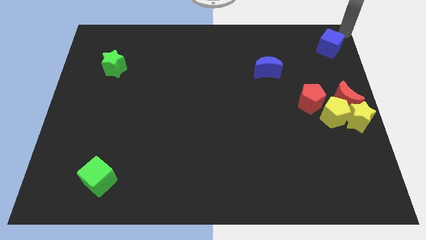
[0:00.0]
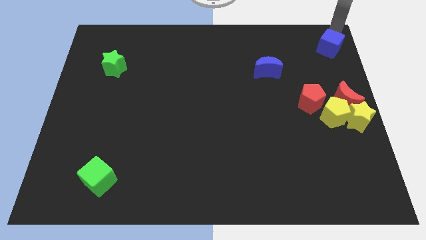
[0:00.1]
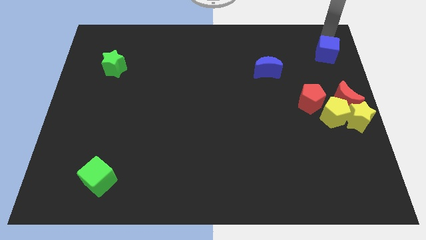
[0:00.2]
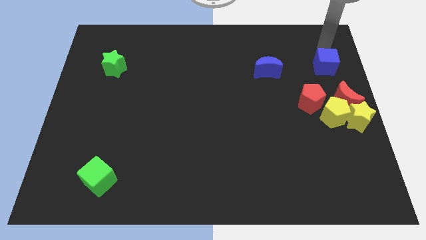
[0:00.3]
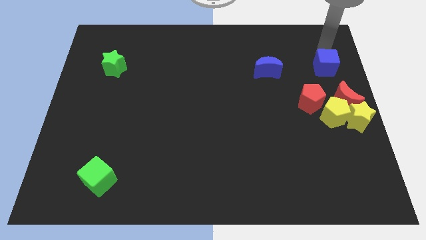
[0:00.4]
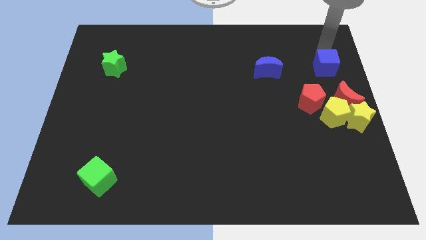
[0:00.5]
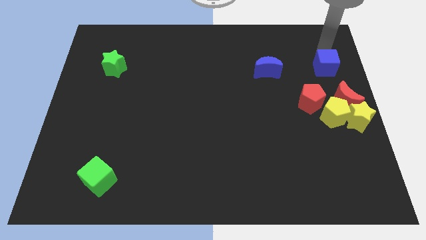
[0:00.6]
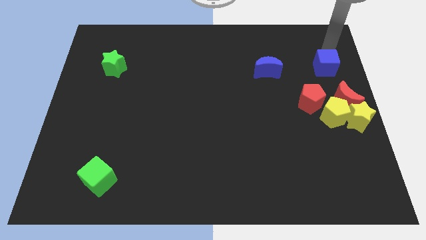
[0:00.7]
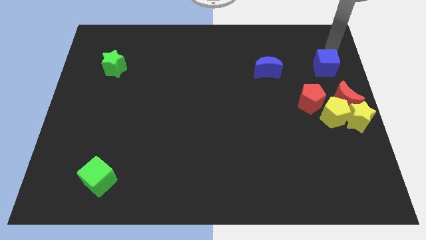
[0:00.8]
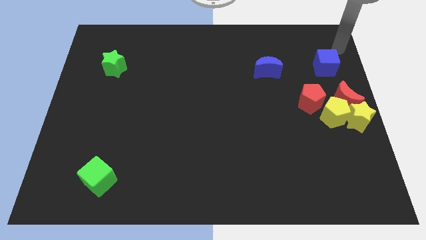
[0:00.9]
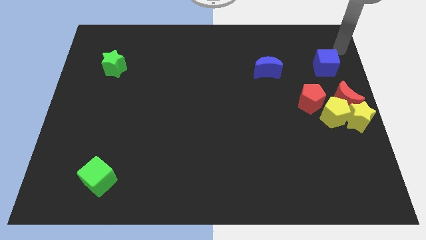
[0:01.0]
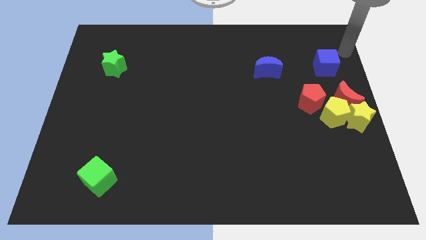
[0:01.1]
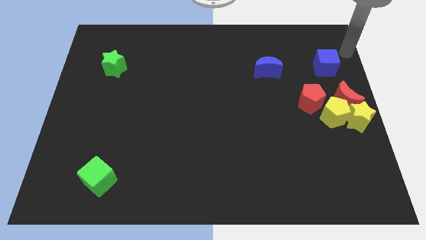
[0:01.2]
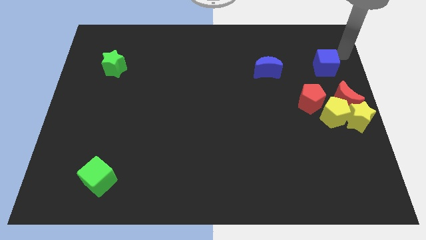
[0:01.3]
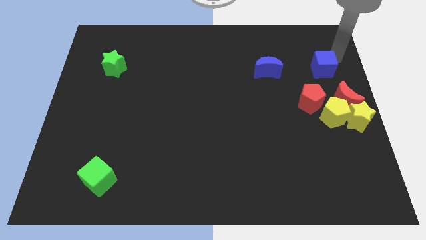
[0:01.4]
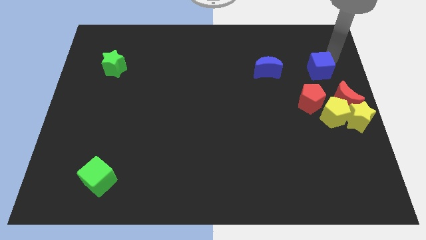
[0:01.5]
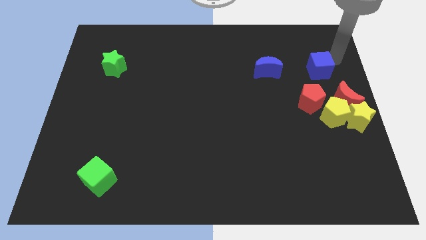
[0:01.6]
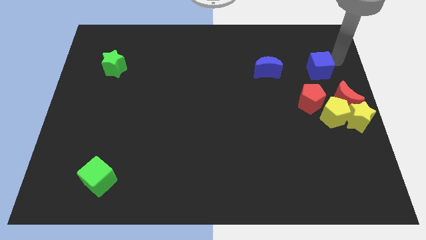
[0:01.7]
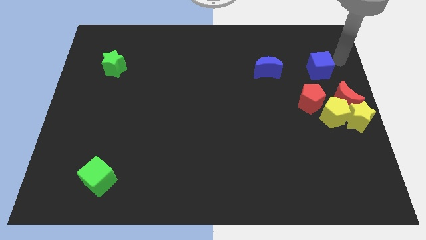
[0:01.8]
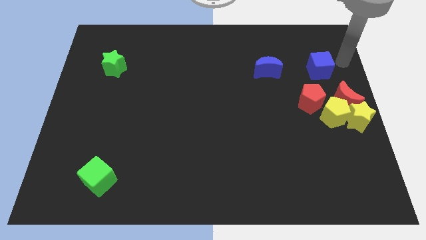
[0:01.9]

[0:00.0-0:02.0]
push the blue cube parallel to the right of the blue moon

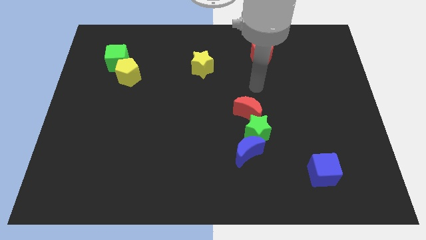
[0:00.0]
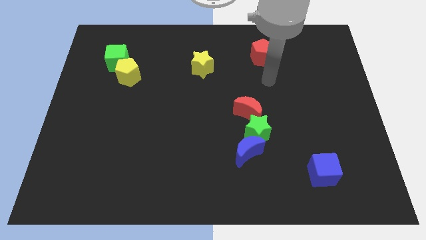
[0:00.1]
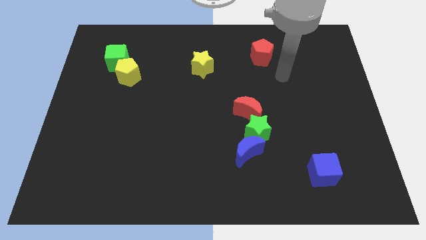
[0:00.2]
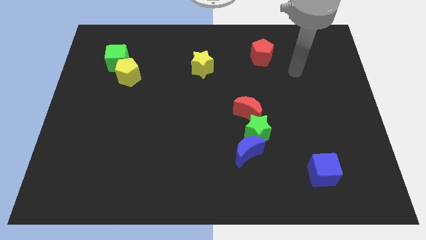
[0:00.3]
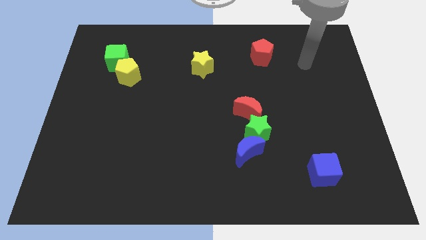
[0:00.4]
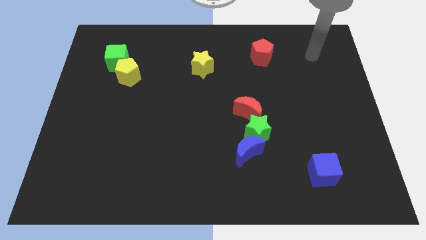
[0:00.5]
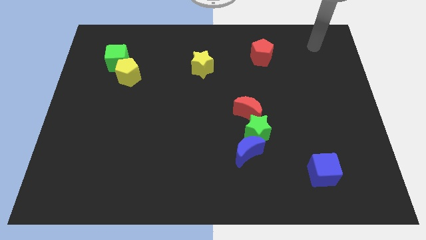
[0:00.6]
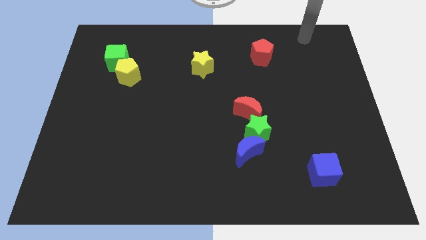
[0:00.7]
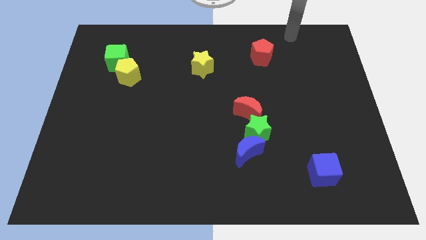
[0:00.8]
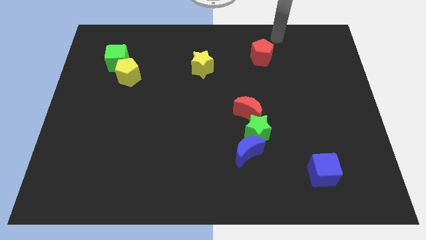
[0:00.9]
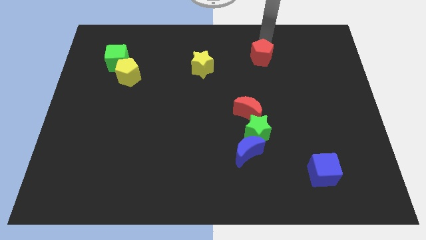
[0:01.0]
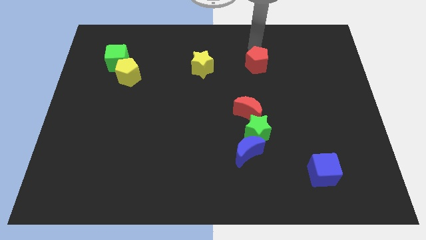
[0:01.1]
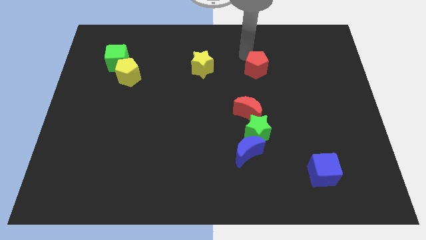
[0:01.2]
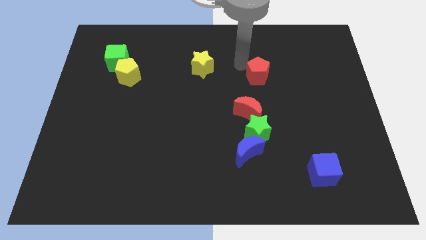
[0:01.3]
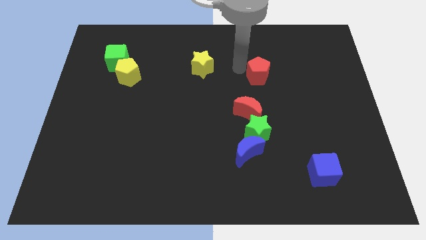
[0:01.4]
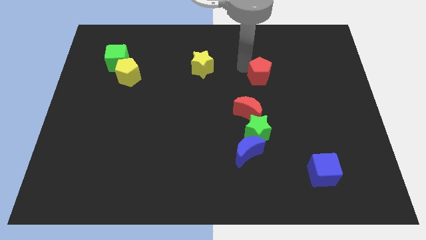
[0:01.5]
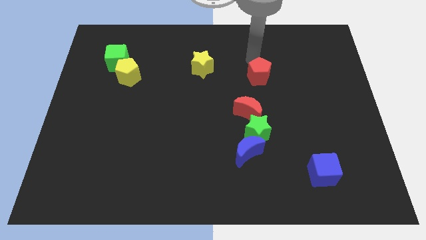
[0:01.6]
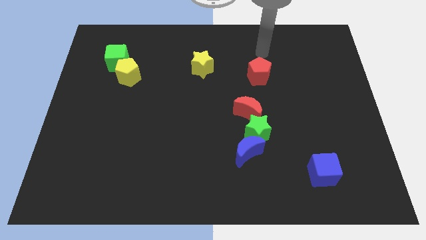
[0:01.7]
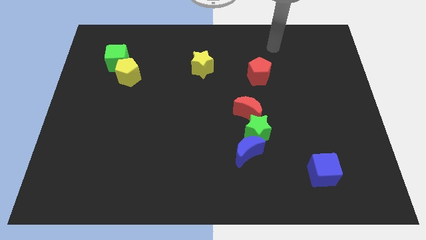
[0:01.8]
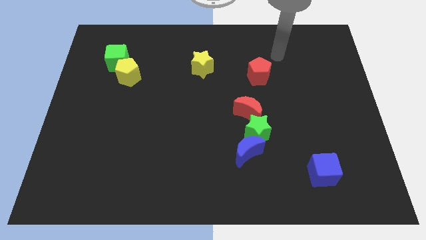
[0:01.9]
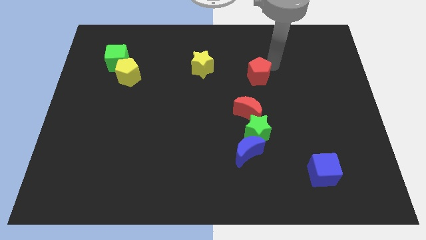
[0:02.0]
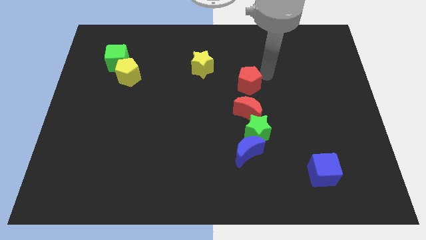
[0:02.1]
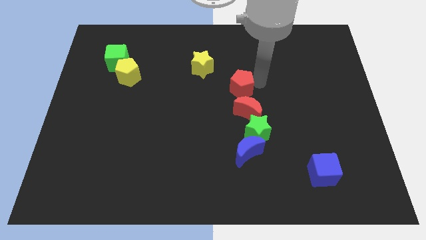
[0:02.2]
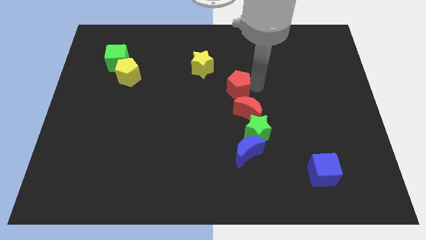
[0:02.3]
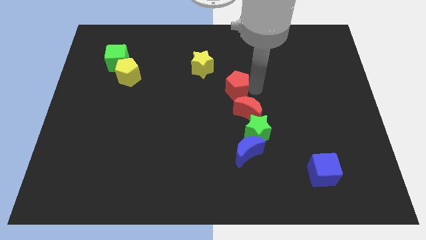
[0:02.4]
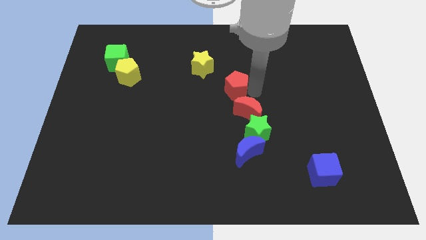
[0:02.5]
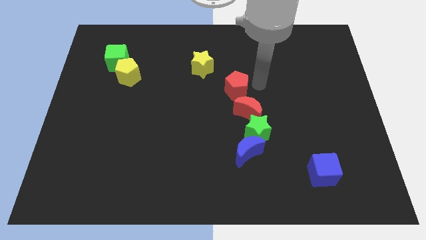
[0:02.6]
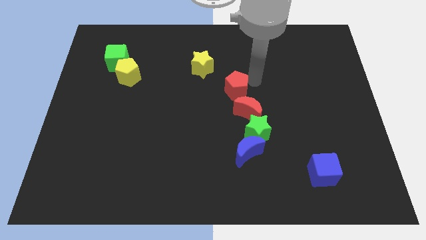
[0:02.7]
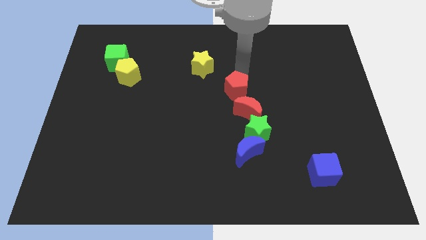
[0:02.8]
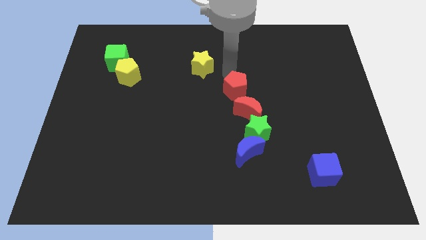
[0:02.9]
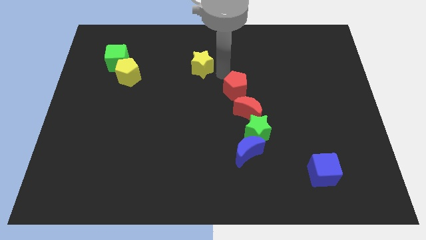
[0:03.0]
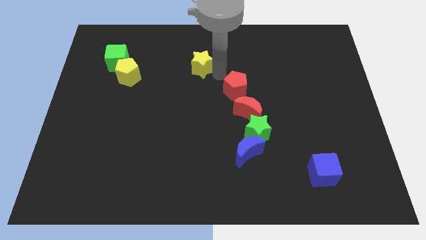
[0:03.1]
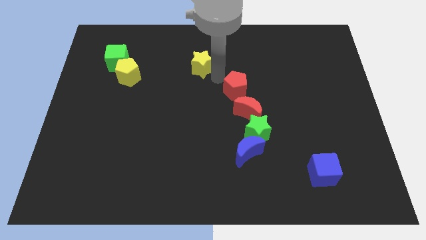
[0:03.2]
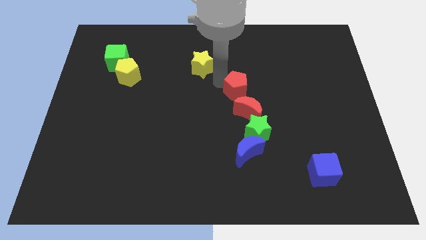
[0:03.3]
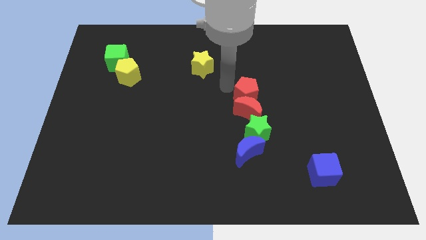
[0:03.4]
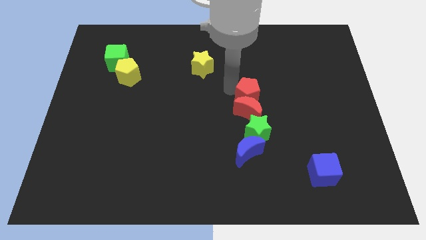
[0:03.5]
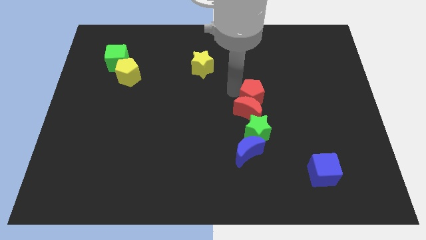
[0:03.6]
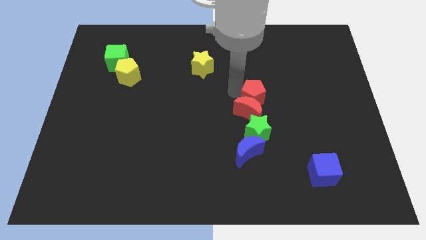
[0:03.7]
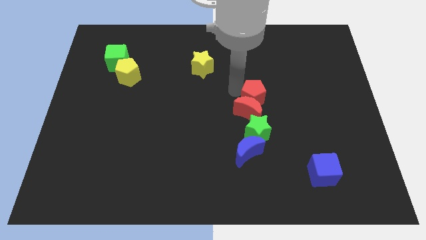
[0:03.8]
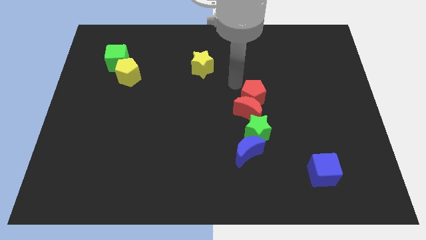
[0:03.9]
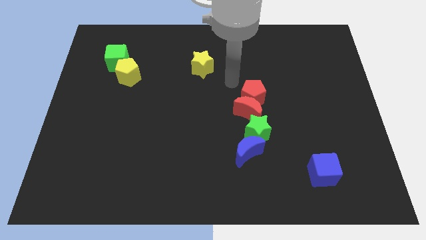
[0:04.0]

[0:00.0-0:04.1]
place the red pentagon to the top of the red crescent

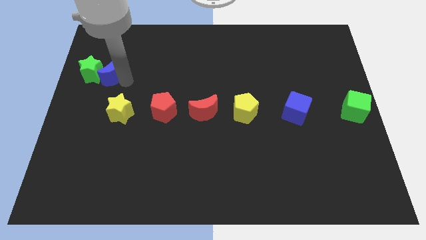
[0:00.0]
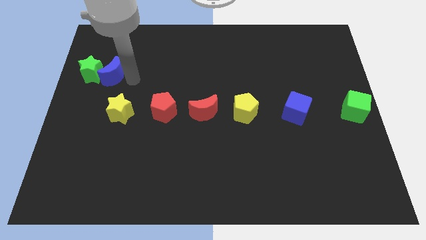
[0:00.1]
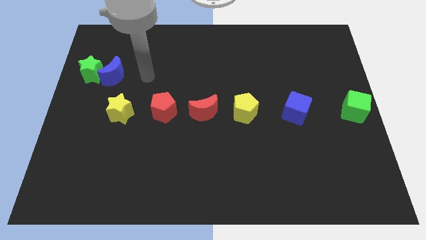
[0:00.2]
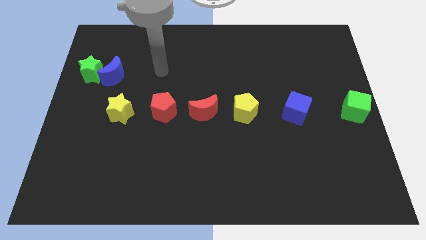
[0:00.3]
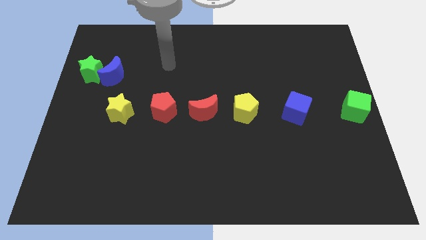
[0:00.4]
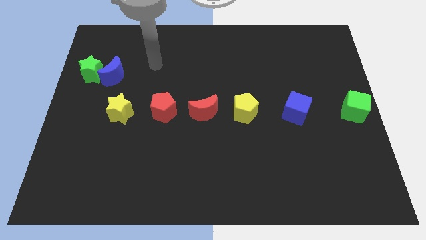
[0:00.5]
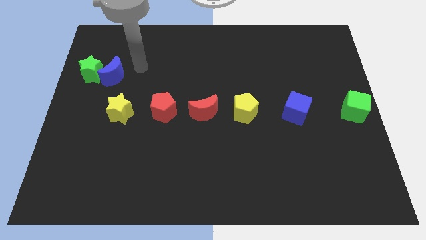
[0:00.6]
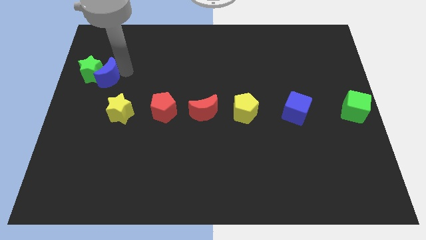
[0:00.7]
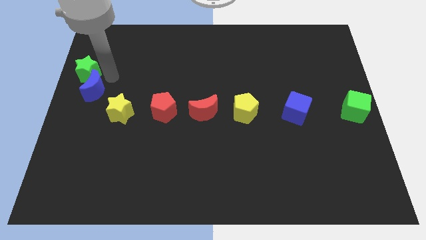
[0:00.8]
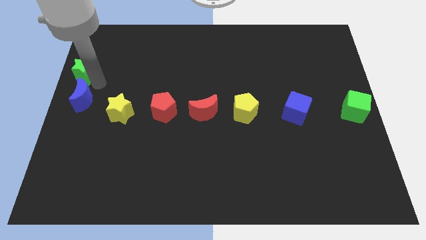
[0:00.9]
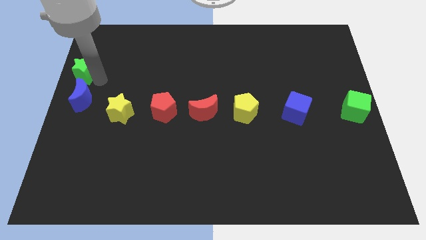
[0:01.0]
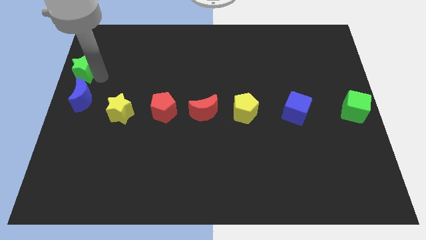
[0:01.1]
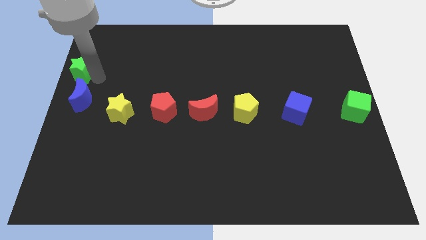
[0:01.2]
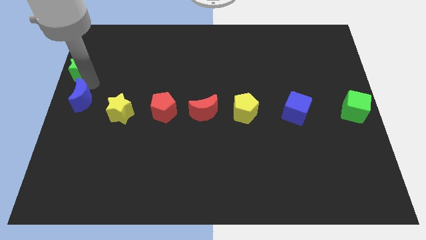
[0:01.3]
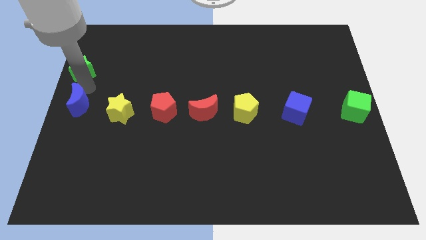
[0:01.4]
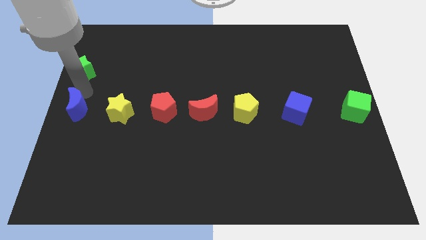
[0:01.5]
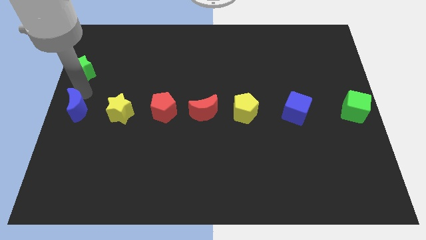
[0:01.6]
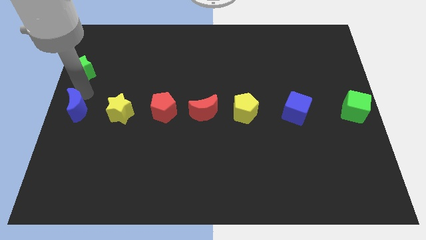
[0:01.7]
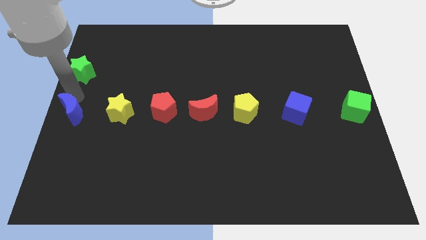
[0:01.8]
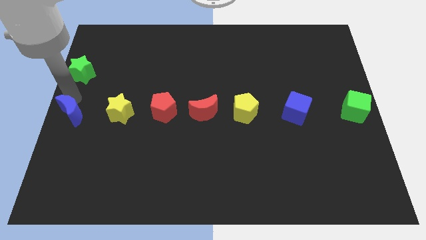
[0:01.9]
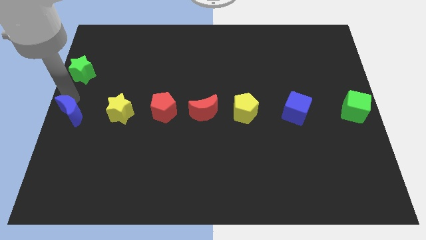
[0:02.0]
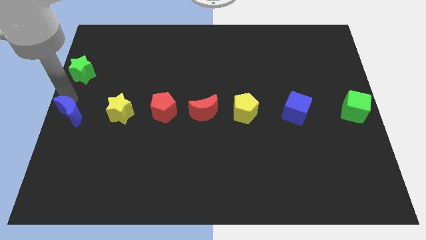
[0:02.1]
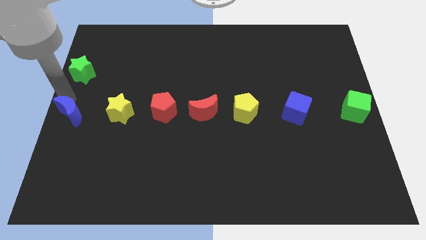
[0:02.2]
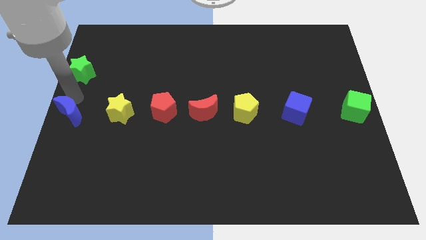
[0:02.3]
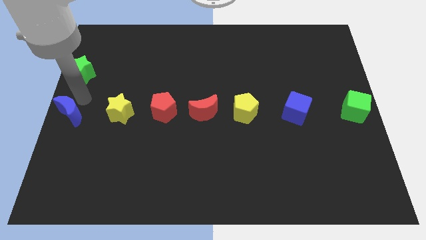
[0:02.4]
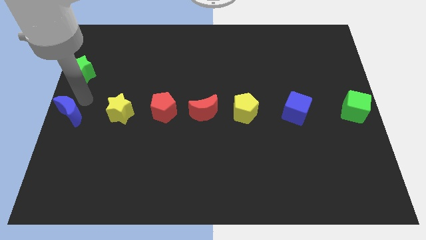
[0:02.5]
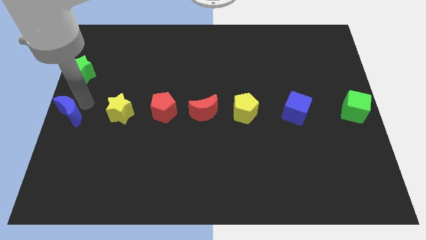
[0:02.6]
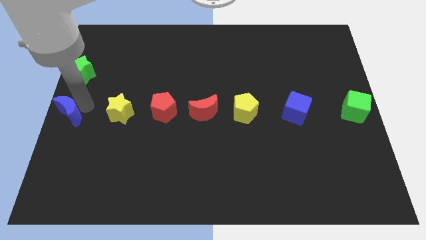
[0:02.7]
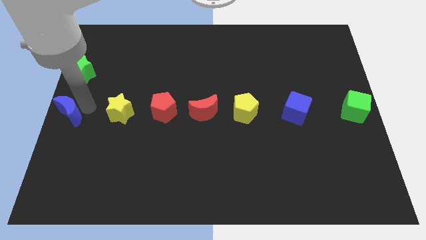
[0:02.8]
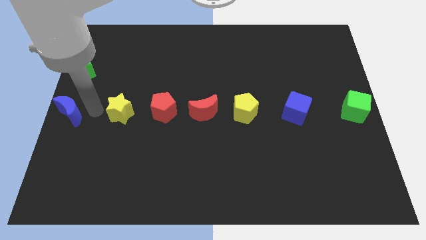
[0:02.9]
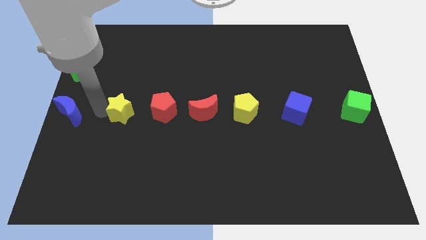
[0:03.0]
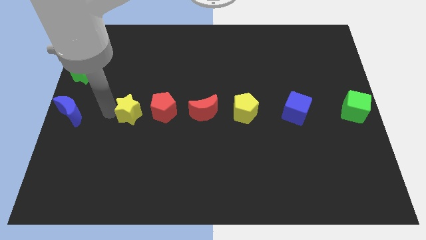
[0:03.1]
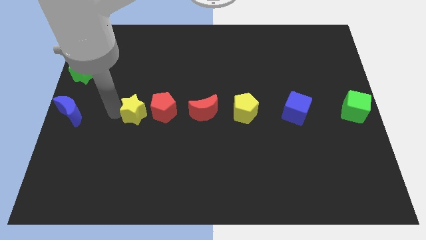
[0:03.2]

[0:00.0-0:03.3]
move the blue crescent to the left of the yellow star
